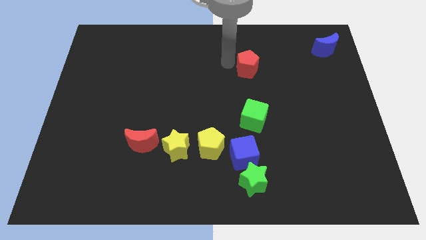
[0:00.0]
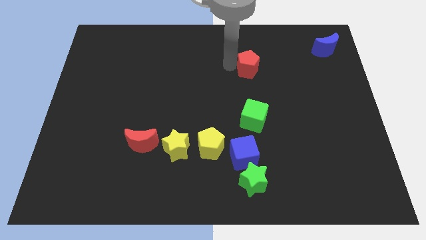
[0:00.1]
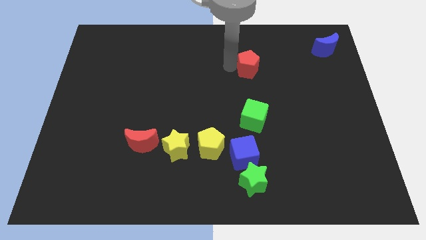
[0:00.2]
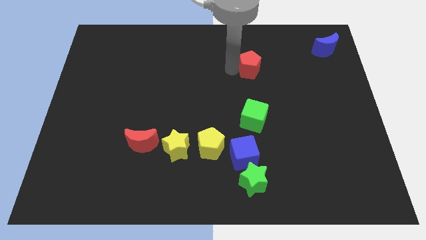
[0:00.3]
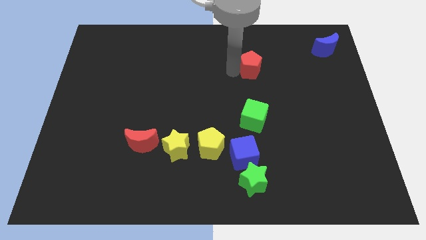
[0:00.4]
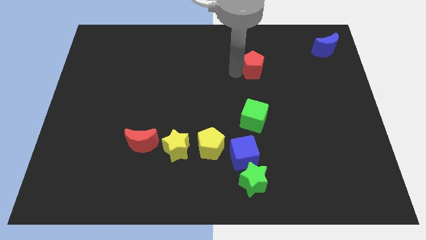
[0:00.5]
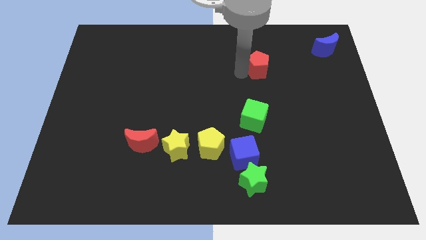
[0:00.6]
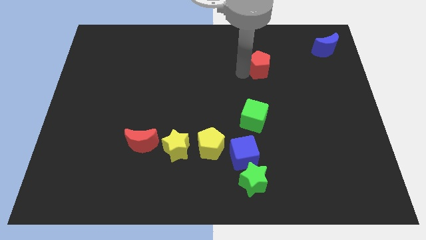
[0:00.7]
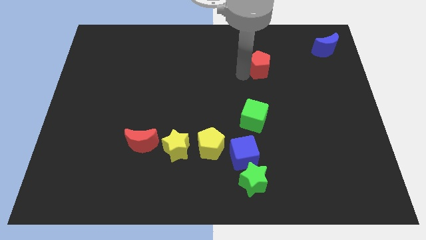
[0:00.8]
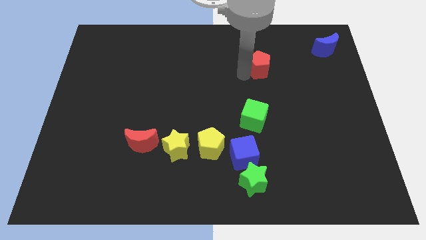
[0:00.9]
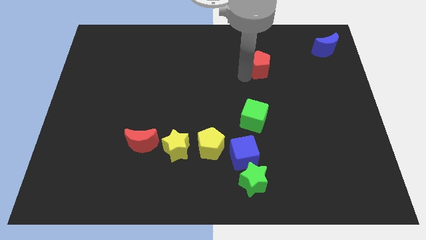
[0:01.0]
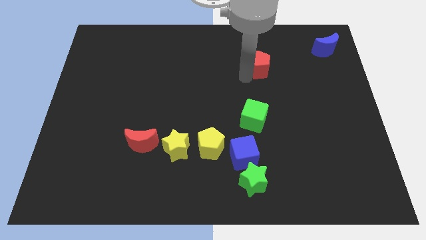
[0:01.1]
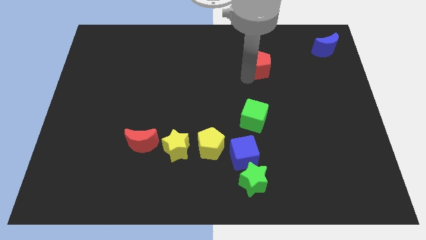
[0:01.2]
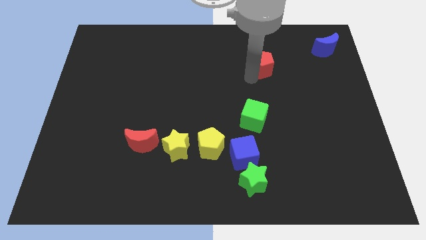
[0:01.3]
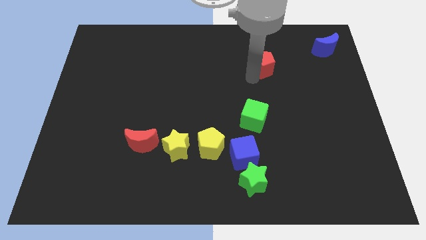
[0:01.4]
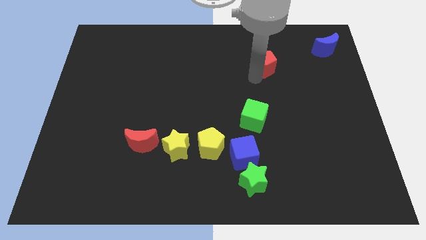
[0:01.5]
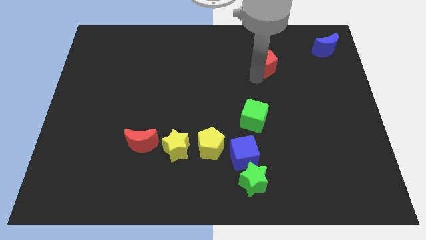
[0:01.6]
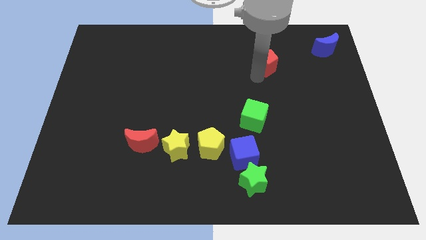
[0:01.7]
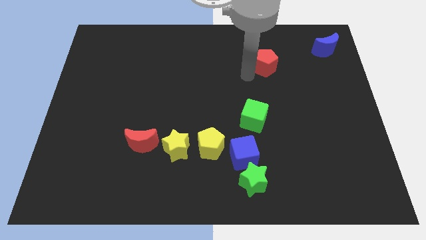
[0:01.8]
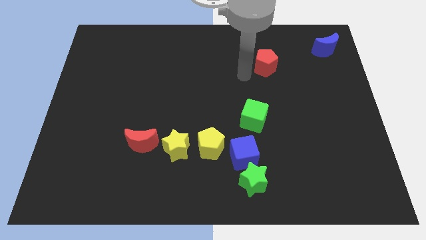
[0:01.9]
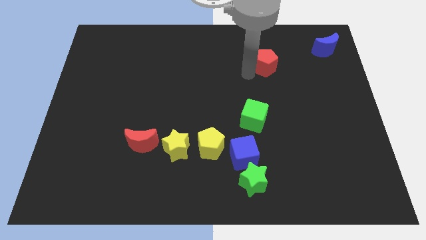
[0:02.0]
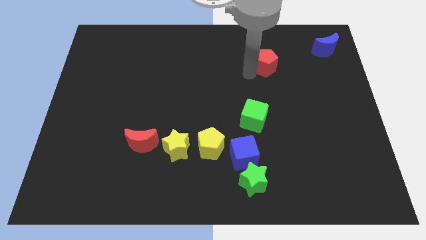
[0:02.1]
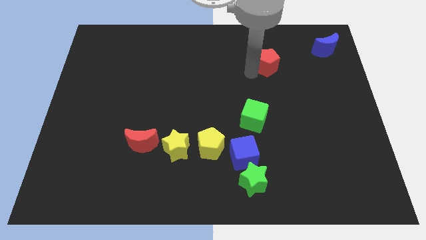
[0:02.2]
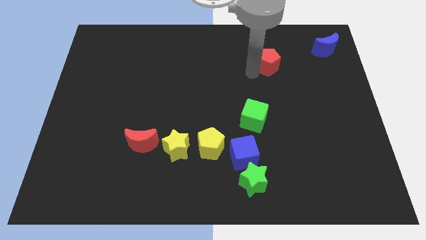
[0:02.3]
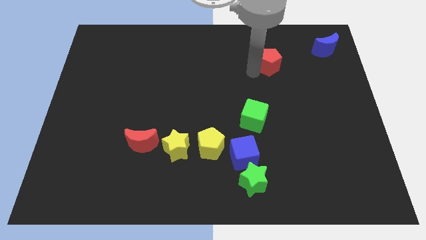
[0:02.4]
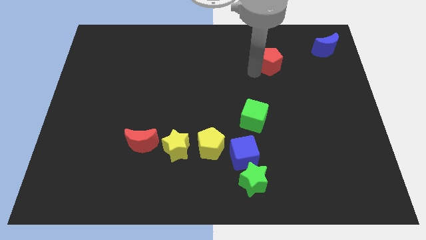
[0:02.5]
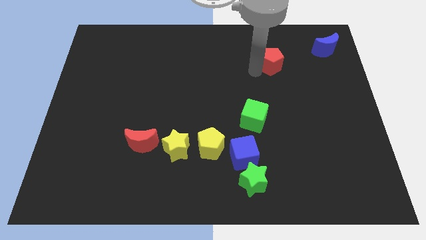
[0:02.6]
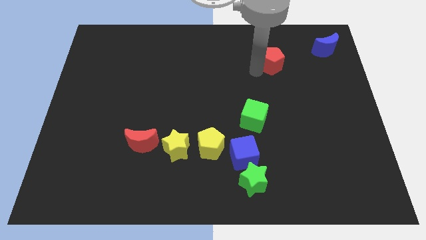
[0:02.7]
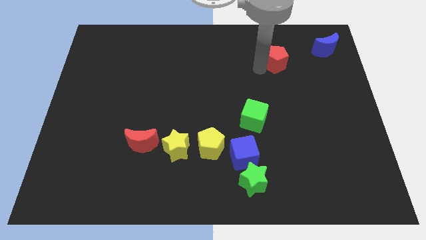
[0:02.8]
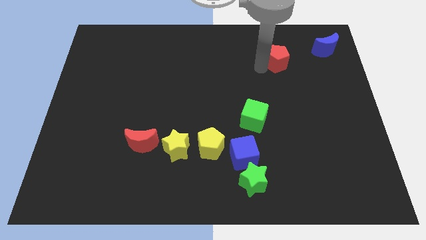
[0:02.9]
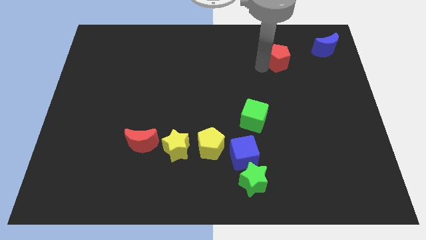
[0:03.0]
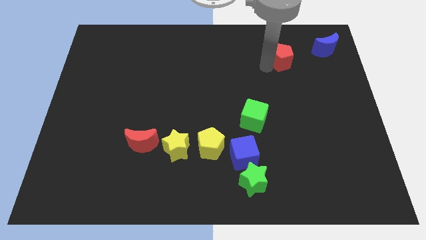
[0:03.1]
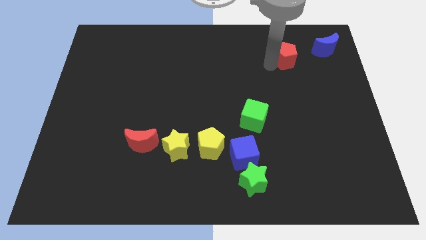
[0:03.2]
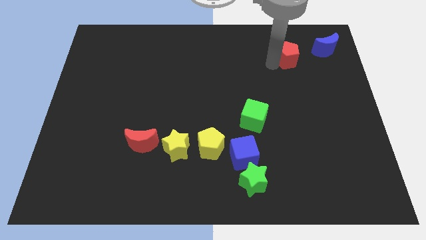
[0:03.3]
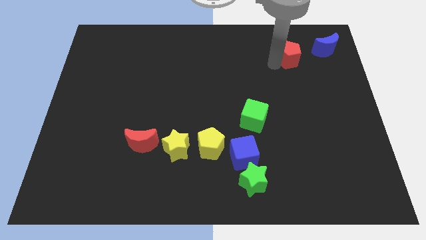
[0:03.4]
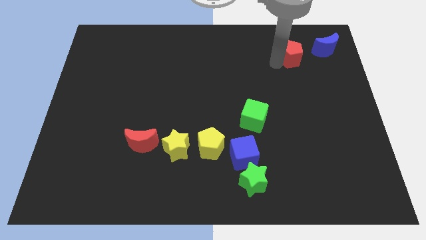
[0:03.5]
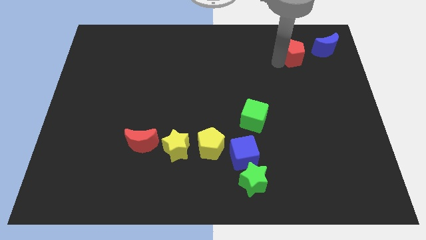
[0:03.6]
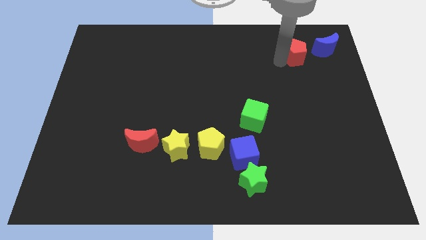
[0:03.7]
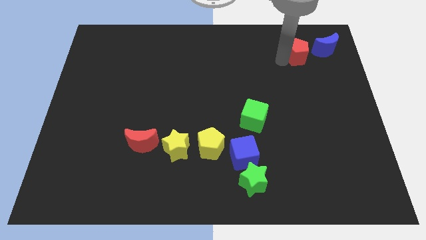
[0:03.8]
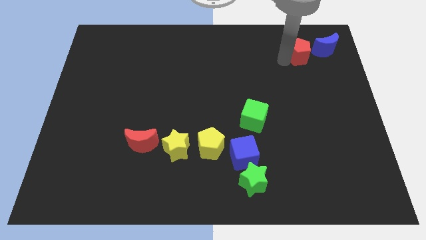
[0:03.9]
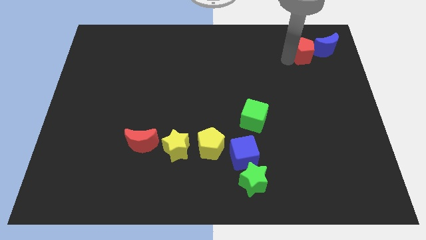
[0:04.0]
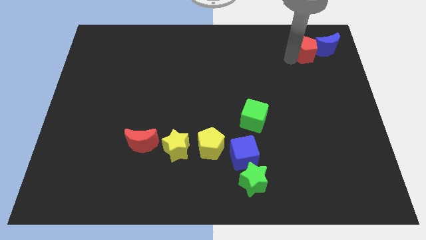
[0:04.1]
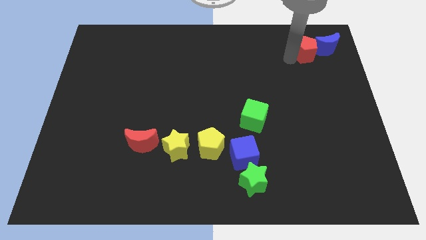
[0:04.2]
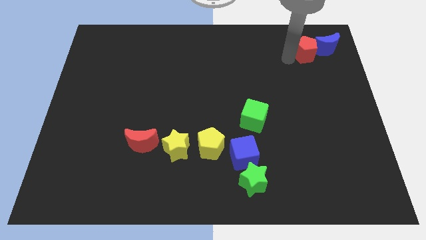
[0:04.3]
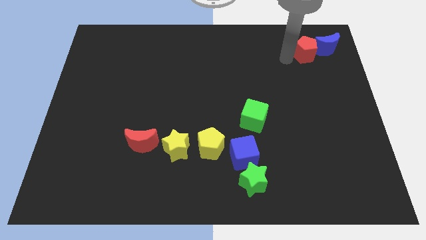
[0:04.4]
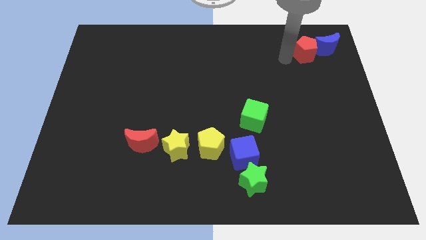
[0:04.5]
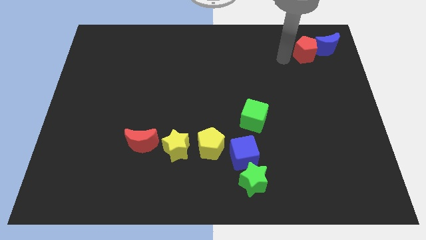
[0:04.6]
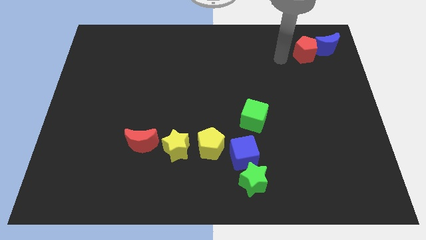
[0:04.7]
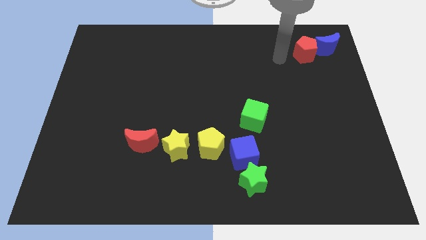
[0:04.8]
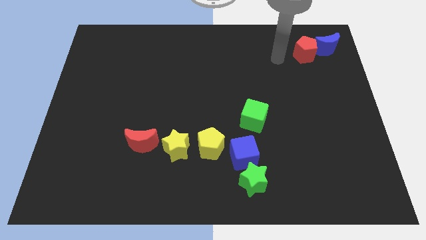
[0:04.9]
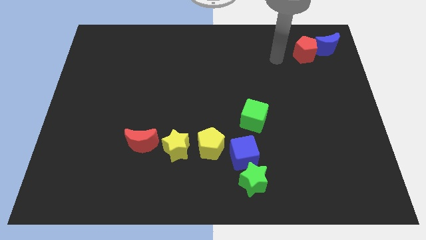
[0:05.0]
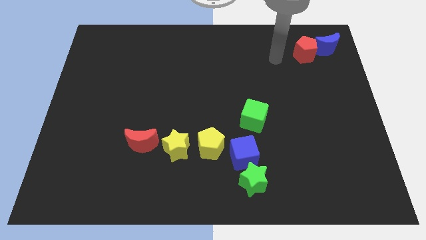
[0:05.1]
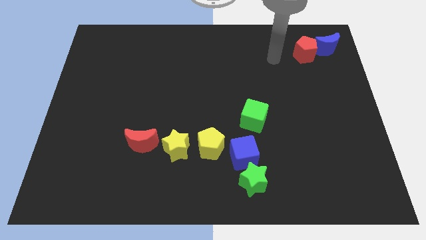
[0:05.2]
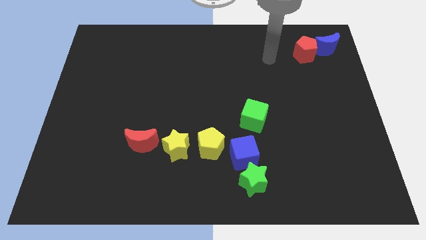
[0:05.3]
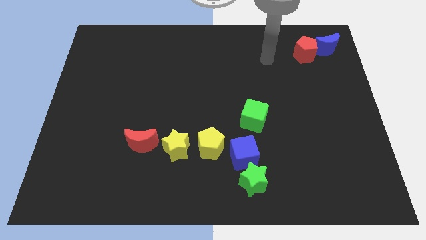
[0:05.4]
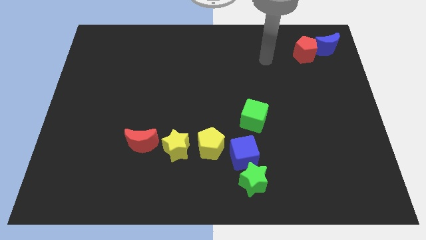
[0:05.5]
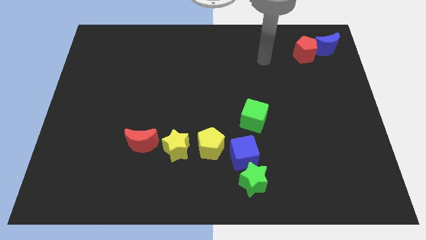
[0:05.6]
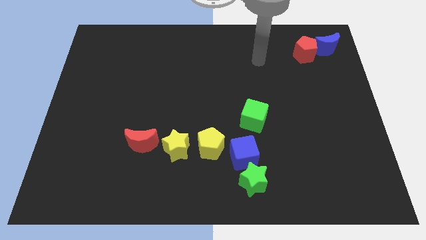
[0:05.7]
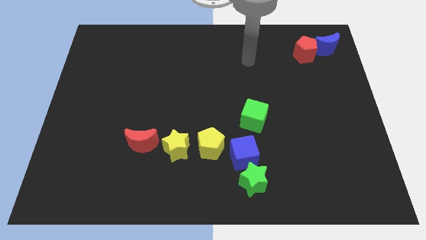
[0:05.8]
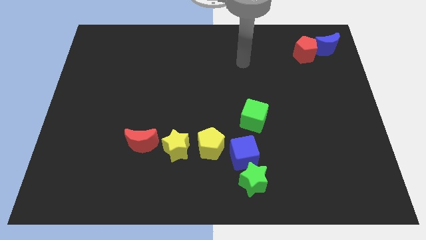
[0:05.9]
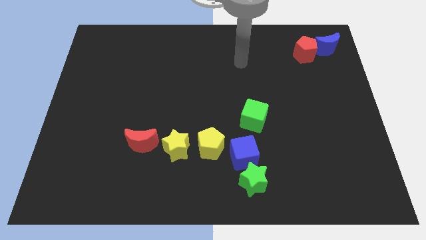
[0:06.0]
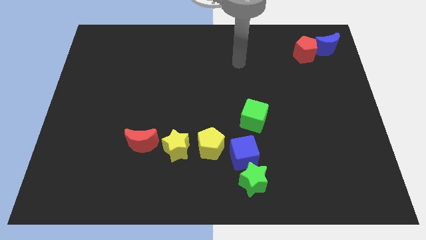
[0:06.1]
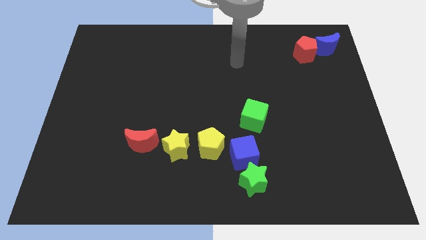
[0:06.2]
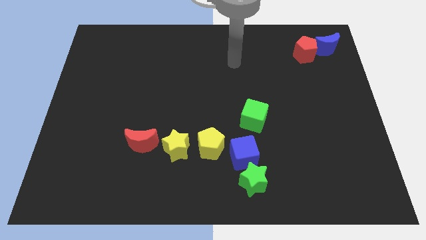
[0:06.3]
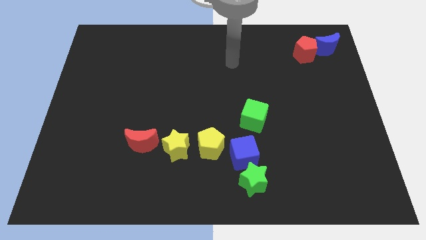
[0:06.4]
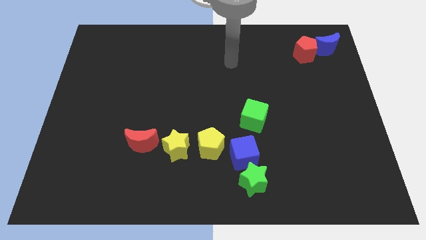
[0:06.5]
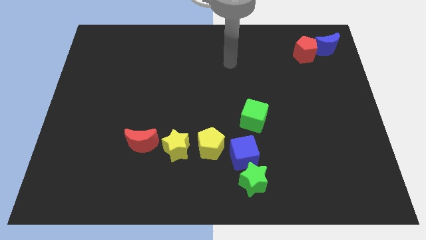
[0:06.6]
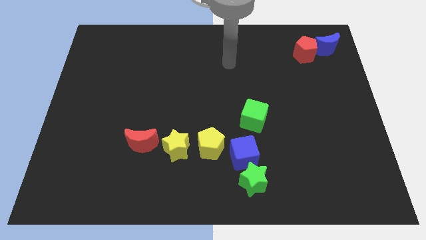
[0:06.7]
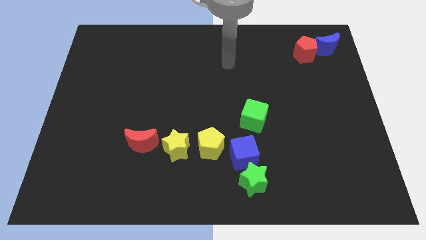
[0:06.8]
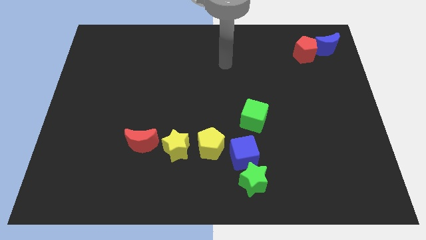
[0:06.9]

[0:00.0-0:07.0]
push the red pentagon into the blue moon

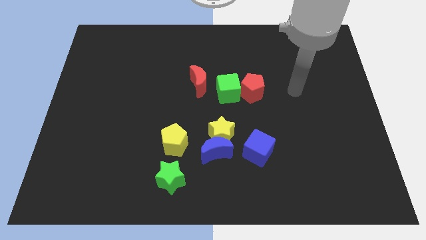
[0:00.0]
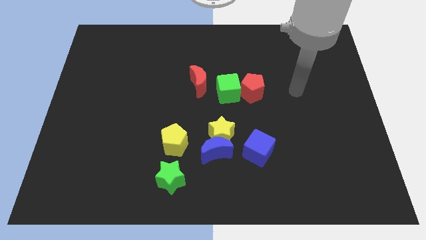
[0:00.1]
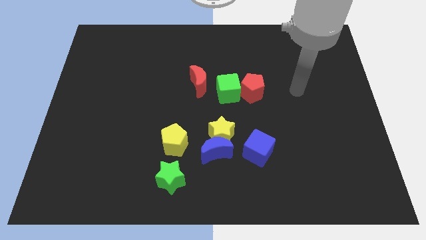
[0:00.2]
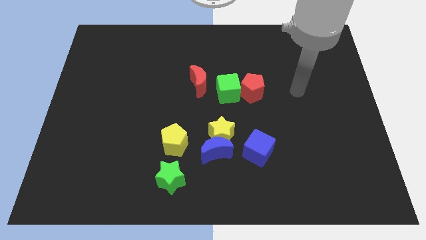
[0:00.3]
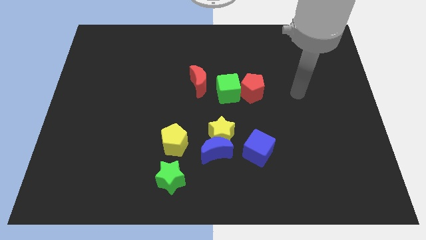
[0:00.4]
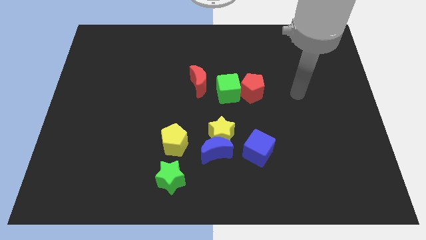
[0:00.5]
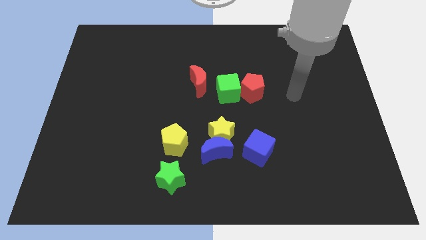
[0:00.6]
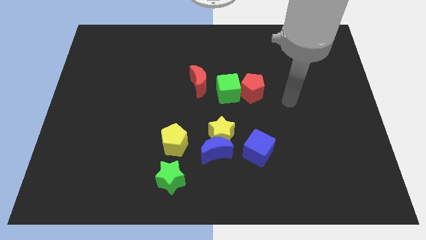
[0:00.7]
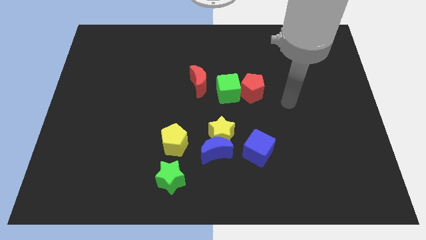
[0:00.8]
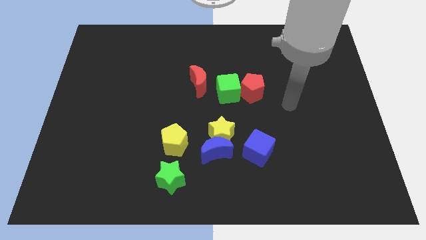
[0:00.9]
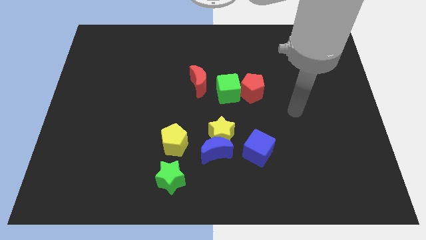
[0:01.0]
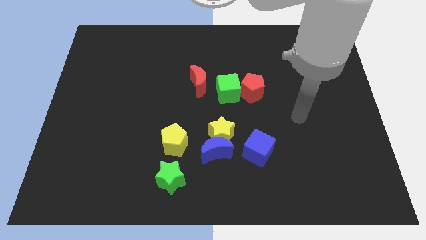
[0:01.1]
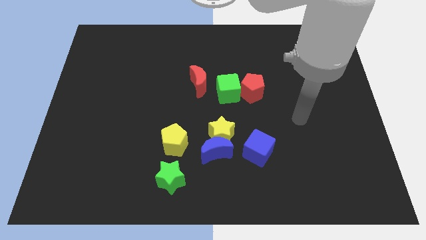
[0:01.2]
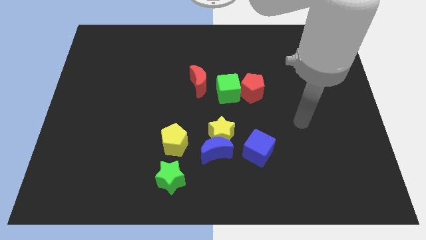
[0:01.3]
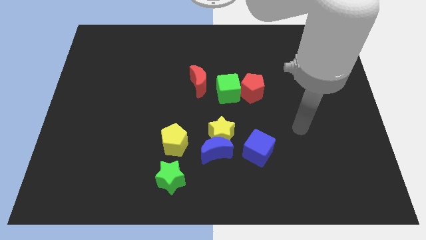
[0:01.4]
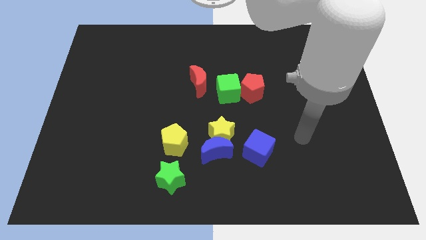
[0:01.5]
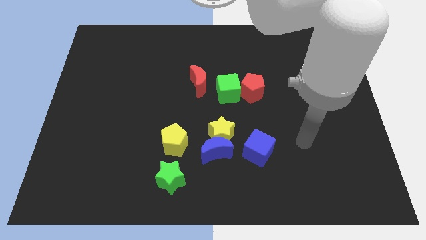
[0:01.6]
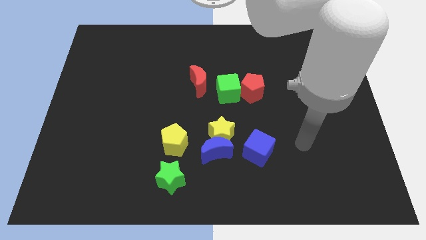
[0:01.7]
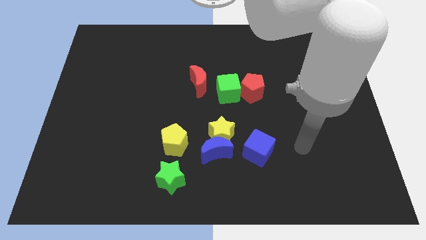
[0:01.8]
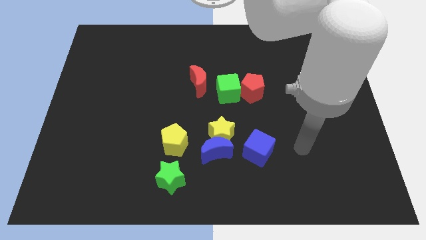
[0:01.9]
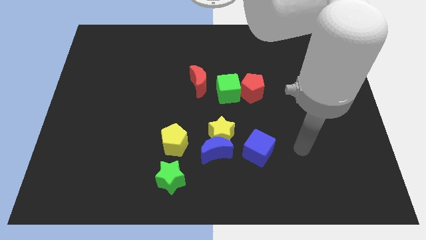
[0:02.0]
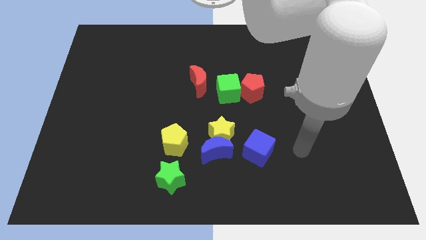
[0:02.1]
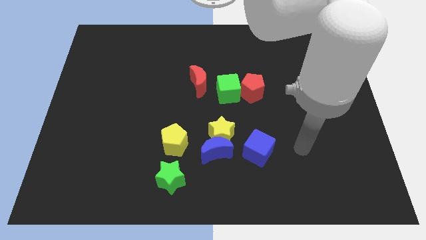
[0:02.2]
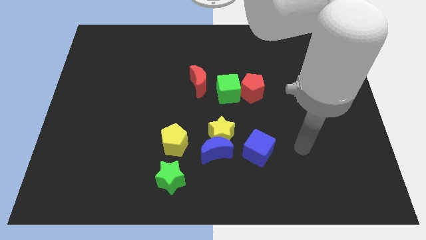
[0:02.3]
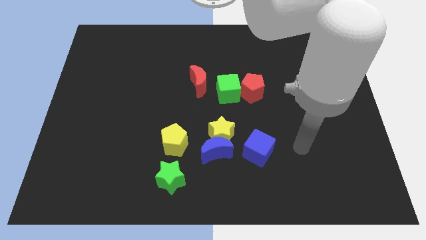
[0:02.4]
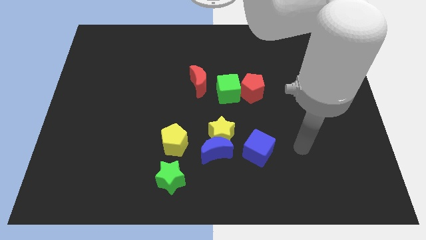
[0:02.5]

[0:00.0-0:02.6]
move your arm to the right of the blue cube
